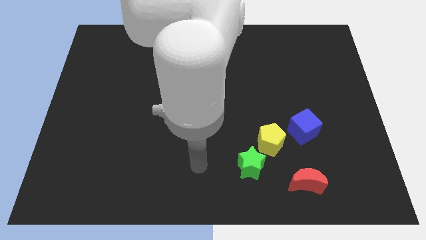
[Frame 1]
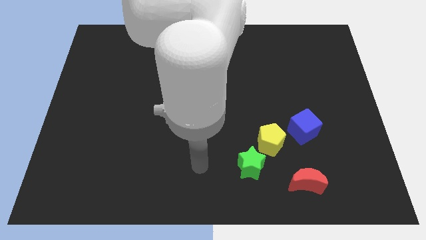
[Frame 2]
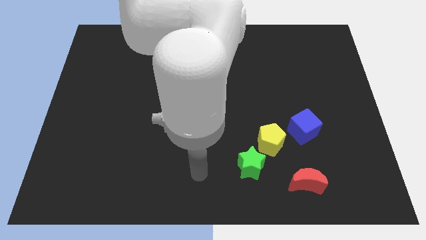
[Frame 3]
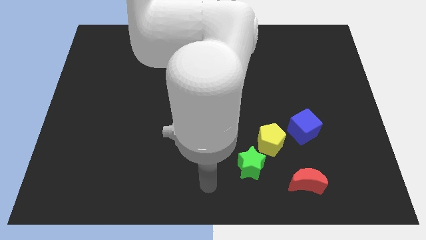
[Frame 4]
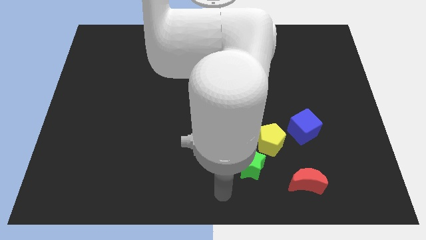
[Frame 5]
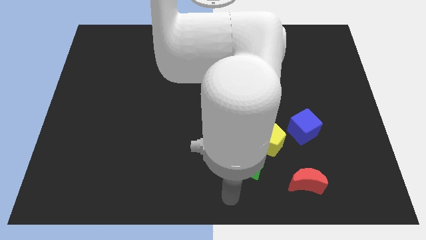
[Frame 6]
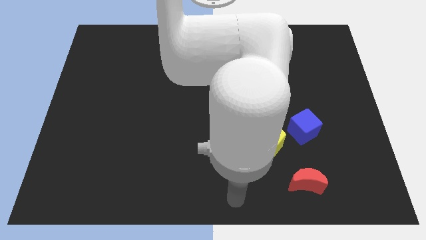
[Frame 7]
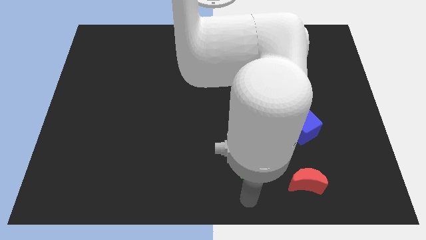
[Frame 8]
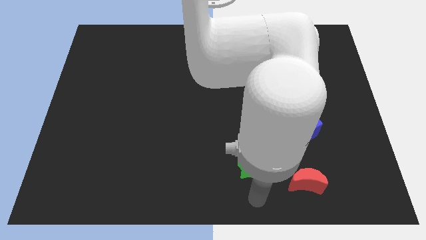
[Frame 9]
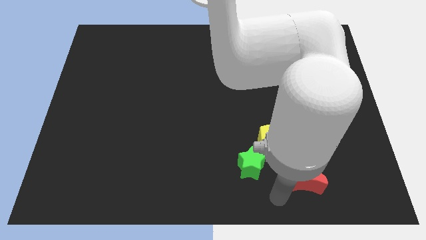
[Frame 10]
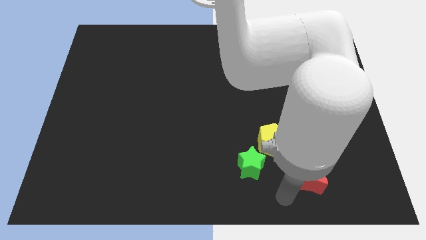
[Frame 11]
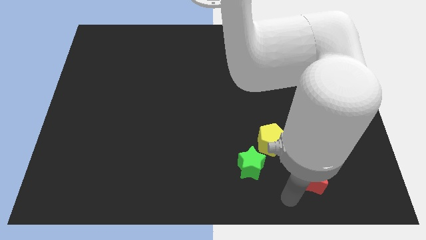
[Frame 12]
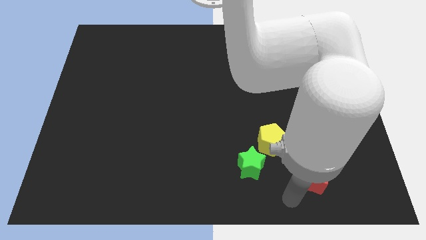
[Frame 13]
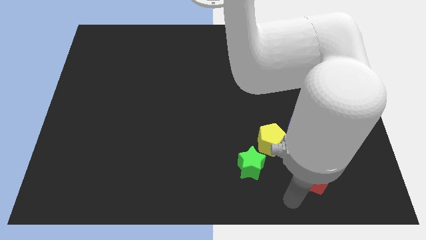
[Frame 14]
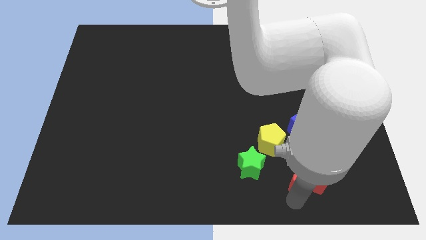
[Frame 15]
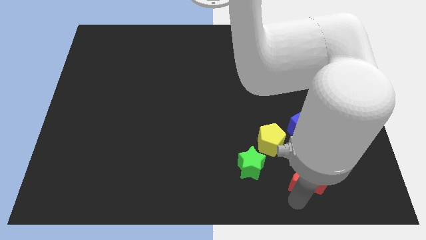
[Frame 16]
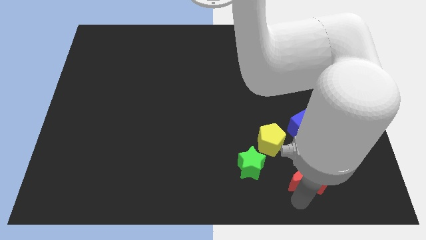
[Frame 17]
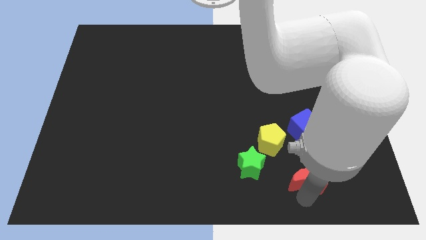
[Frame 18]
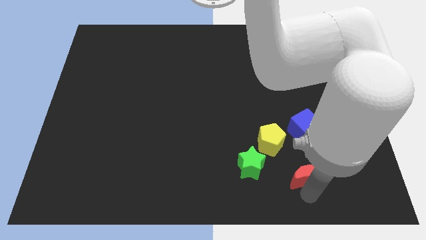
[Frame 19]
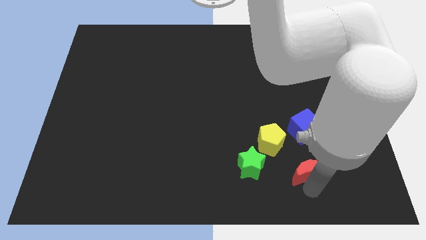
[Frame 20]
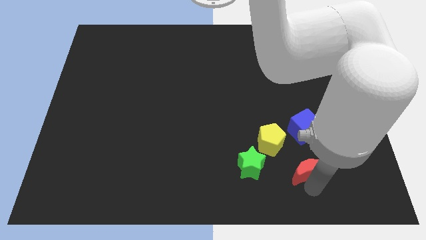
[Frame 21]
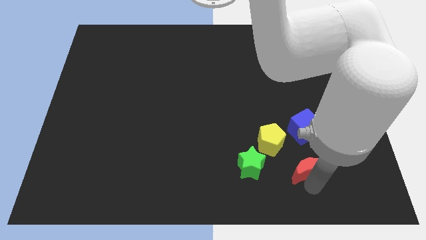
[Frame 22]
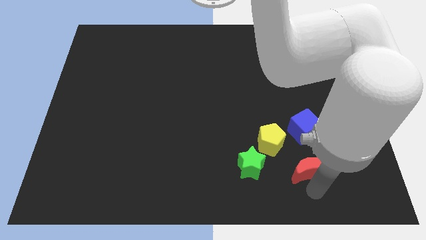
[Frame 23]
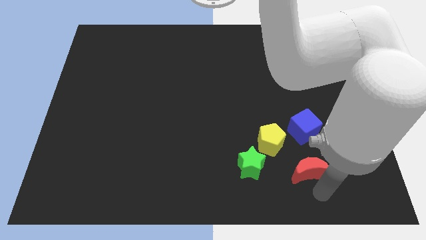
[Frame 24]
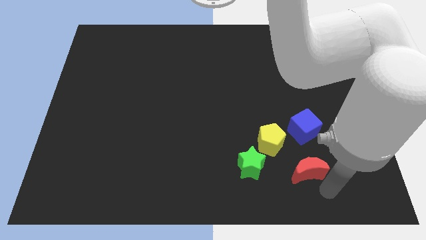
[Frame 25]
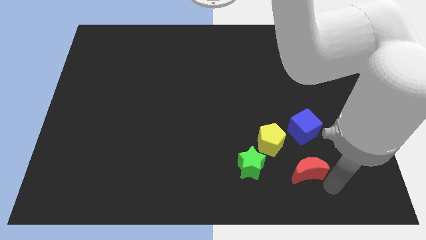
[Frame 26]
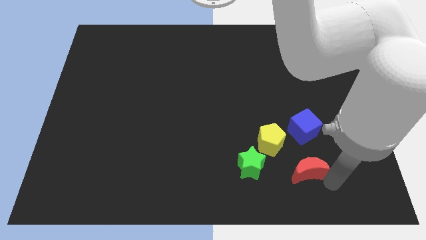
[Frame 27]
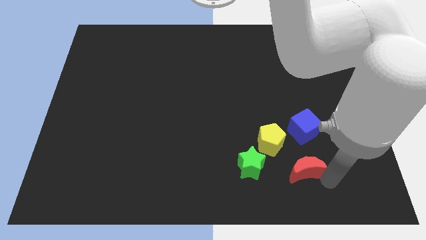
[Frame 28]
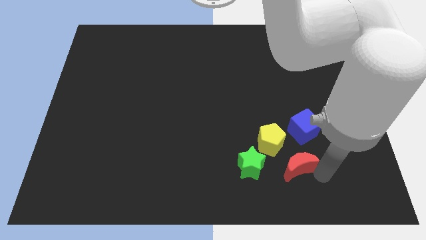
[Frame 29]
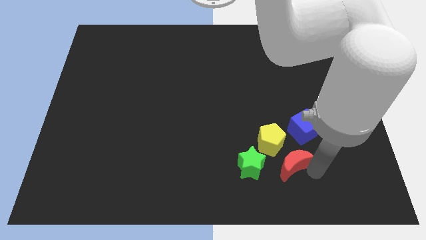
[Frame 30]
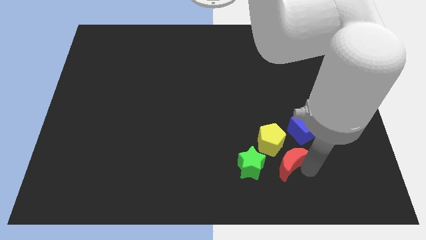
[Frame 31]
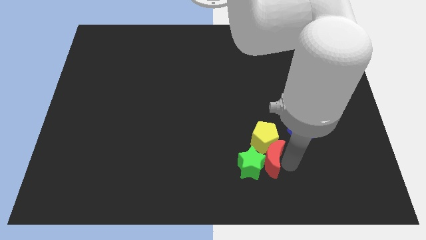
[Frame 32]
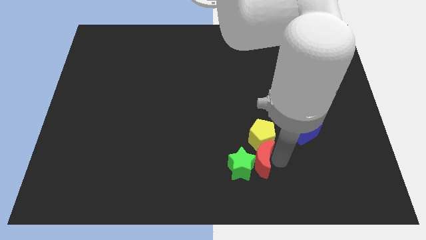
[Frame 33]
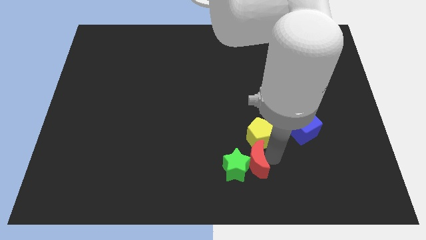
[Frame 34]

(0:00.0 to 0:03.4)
slide the red block to the green star

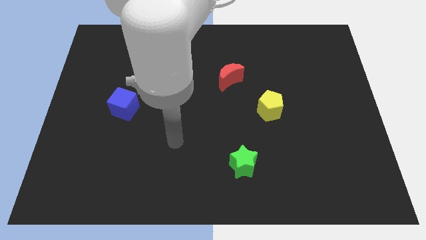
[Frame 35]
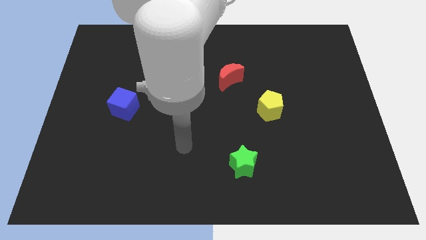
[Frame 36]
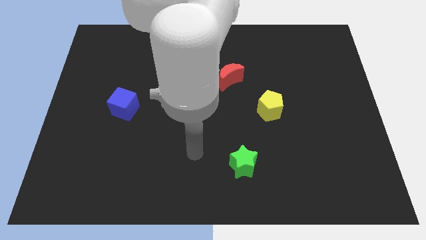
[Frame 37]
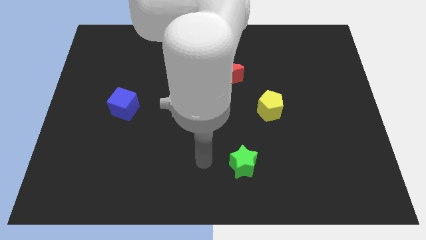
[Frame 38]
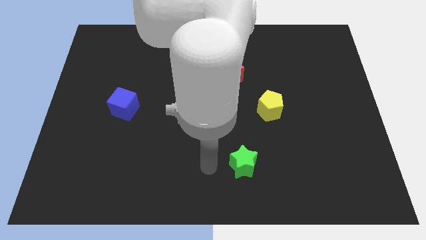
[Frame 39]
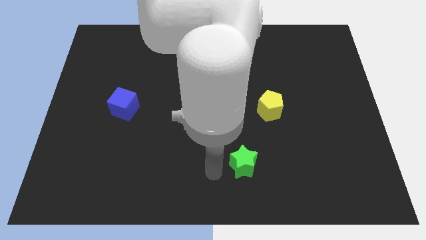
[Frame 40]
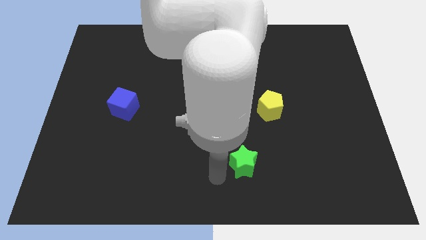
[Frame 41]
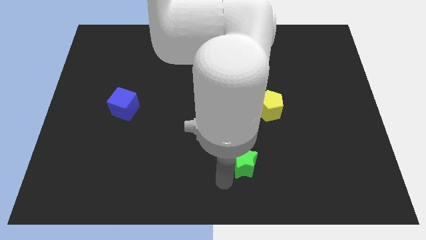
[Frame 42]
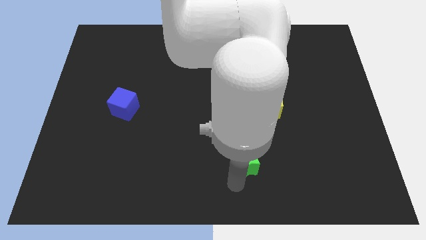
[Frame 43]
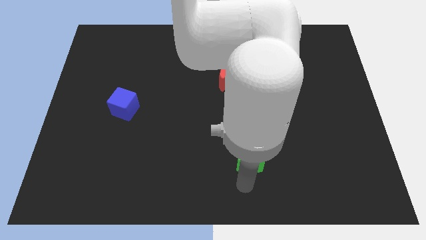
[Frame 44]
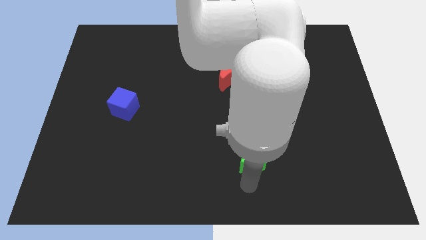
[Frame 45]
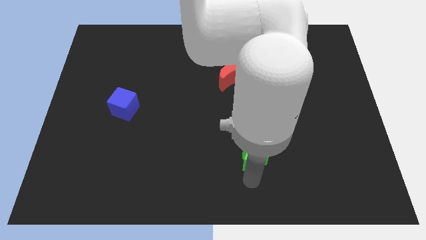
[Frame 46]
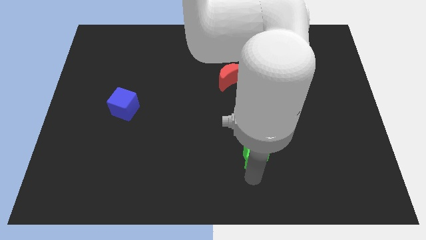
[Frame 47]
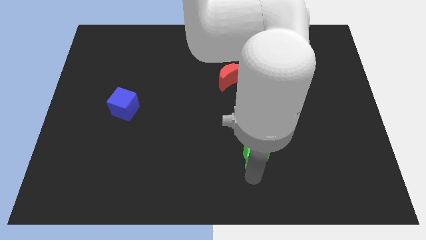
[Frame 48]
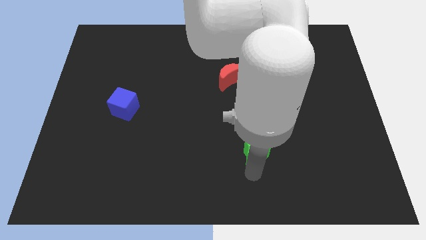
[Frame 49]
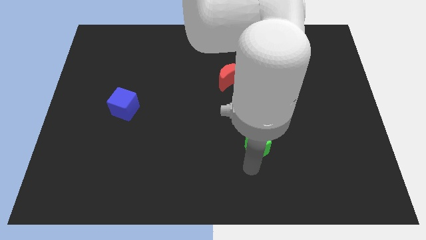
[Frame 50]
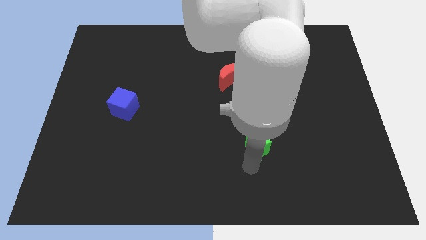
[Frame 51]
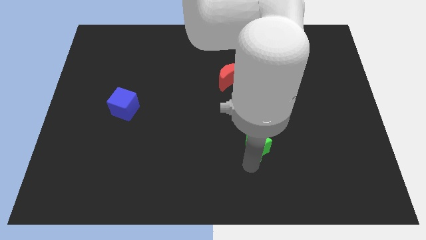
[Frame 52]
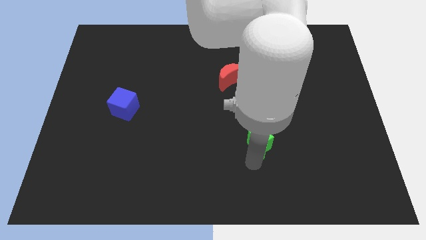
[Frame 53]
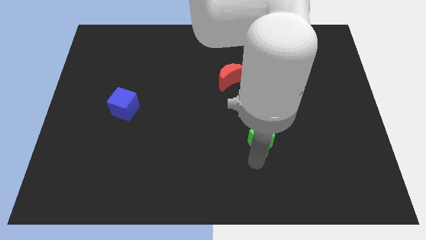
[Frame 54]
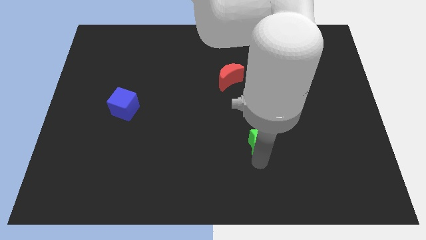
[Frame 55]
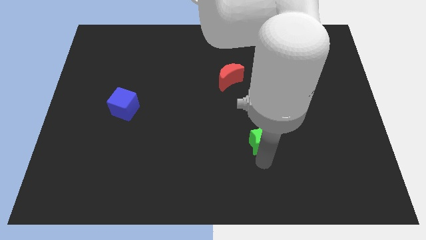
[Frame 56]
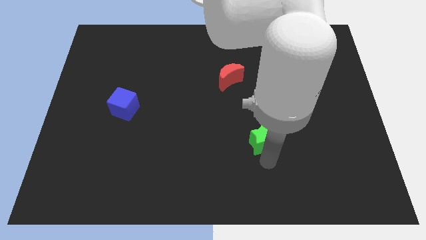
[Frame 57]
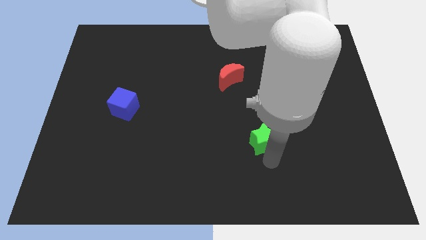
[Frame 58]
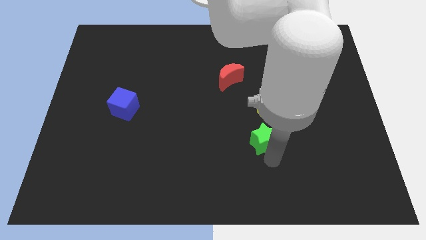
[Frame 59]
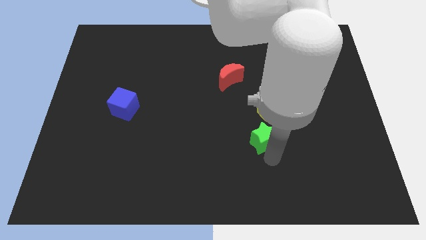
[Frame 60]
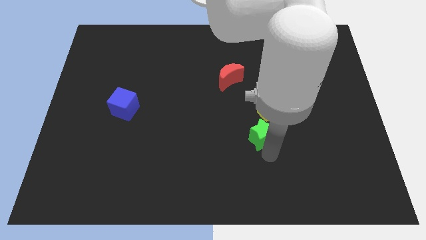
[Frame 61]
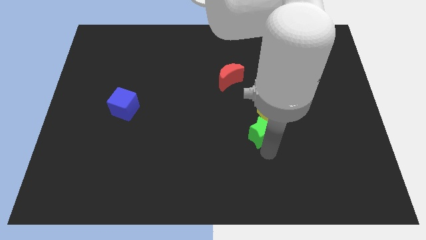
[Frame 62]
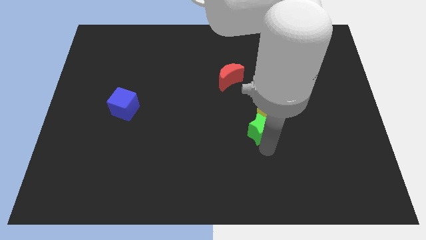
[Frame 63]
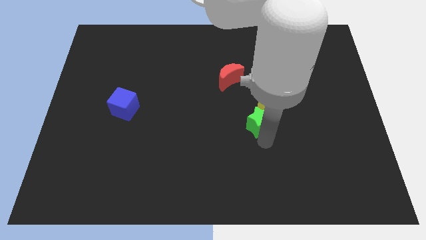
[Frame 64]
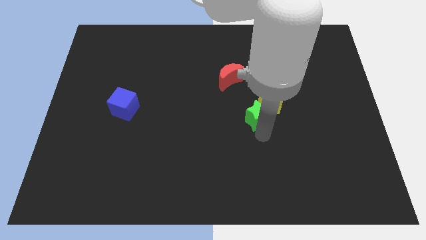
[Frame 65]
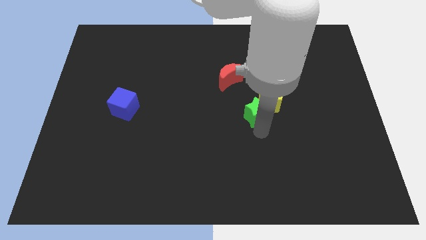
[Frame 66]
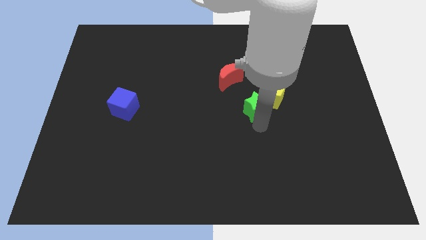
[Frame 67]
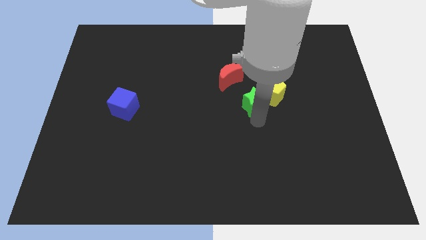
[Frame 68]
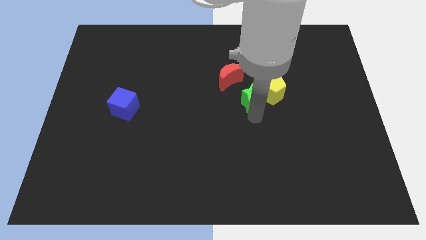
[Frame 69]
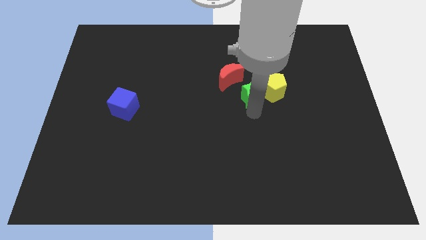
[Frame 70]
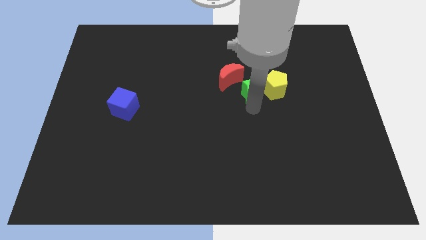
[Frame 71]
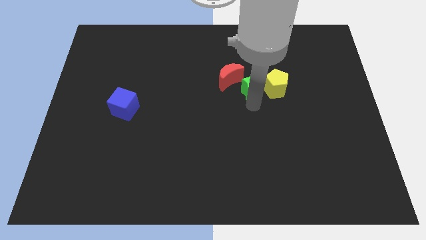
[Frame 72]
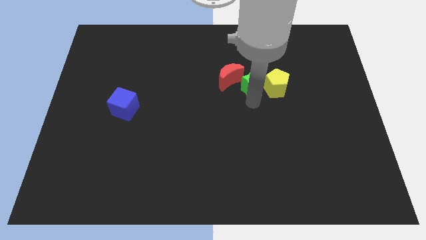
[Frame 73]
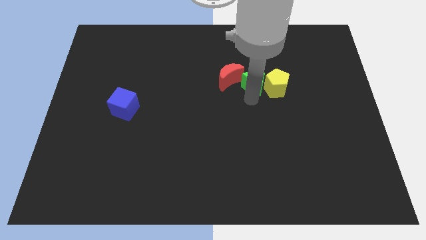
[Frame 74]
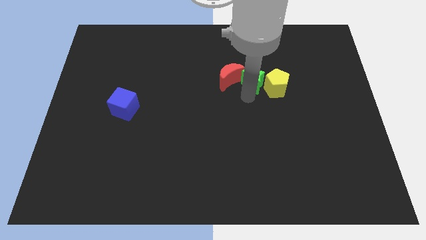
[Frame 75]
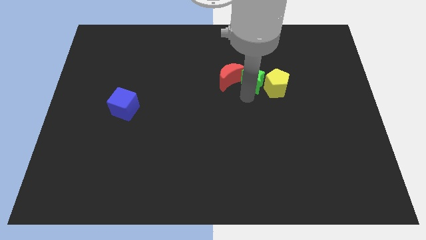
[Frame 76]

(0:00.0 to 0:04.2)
push the green star towards the red block

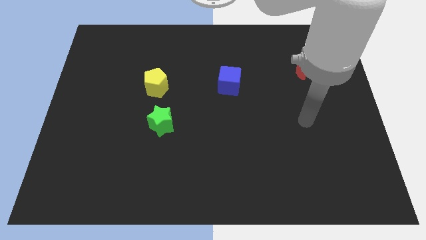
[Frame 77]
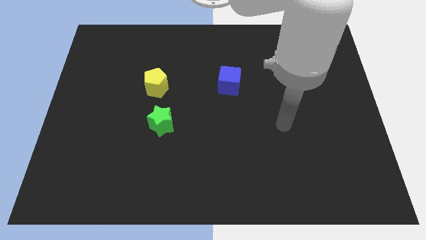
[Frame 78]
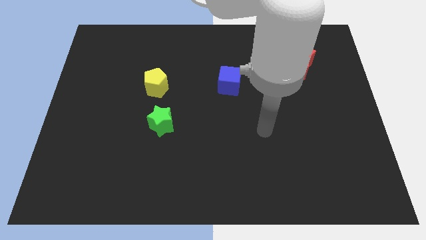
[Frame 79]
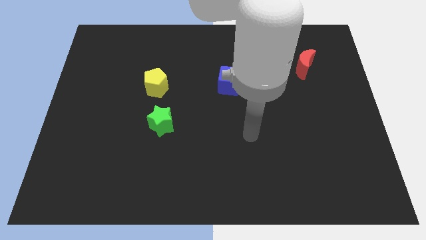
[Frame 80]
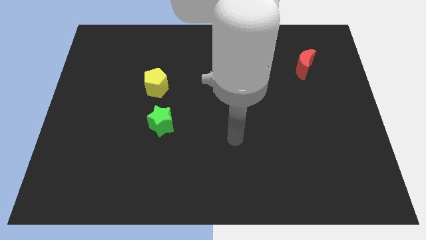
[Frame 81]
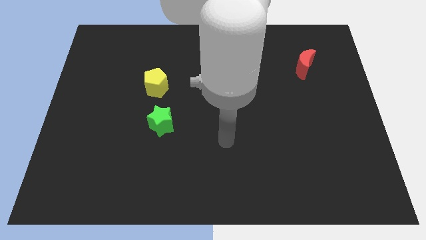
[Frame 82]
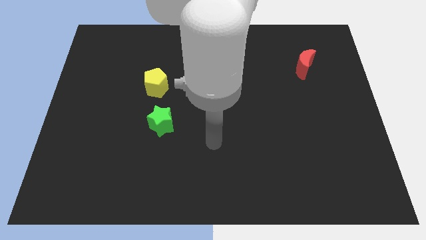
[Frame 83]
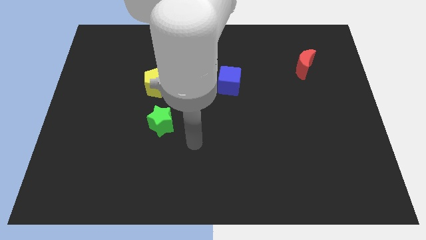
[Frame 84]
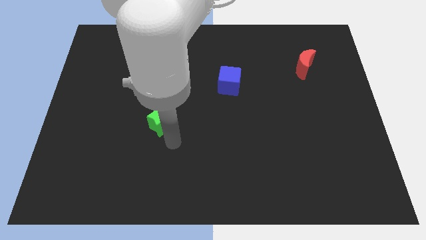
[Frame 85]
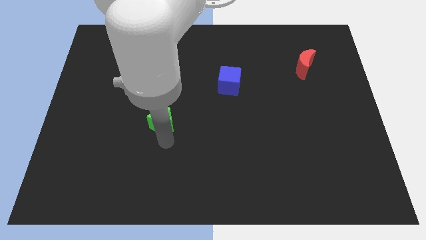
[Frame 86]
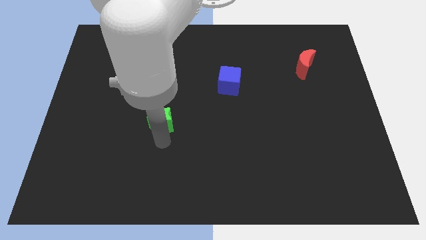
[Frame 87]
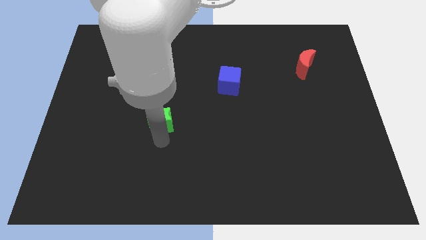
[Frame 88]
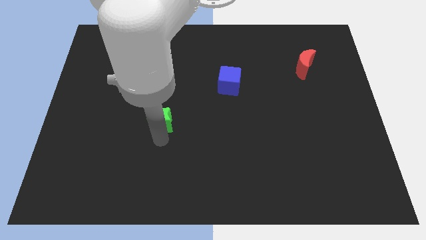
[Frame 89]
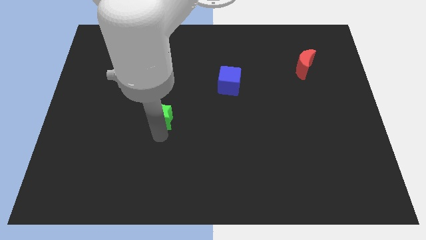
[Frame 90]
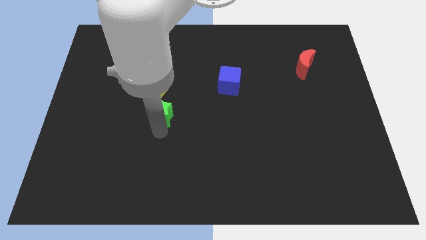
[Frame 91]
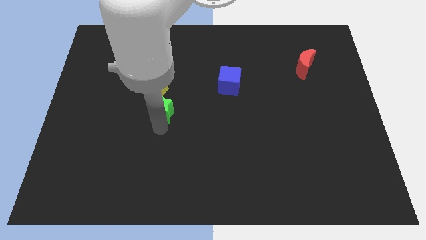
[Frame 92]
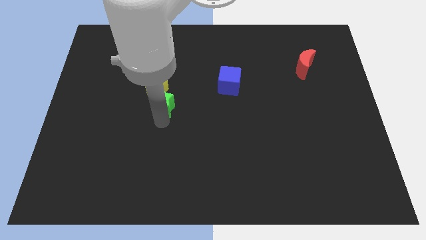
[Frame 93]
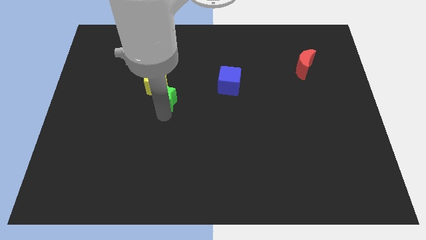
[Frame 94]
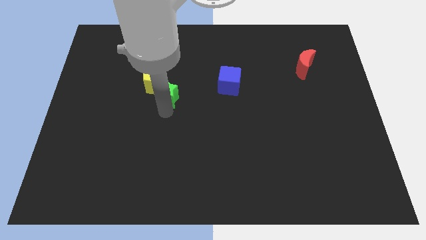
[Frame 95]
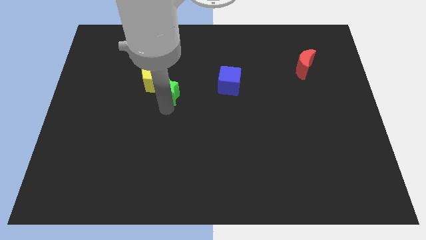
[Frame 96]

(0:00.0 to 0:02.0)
slide the star to the yellow block
